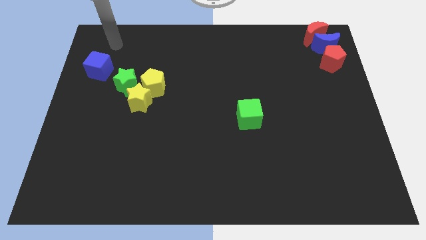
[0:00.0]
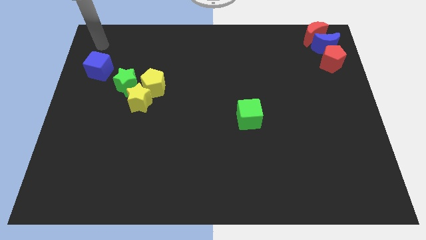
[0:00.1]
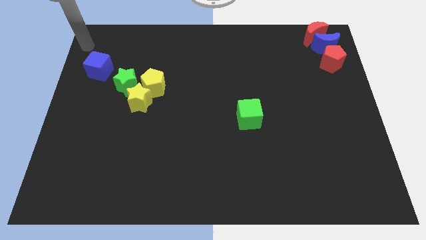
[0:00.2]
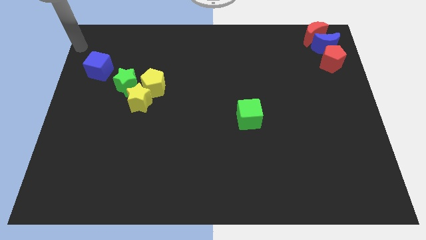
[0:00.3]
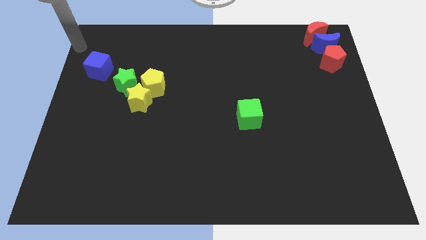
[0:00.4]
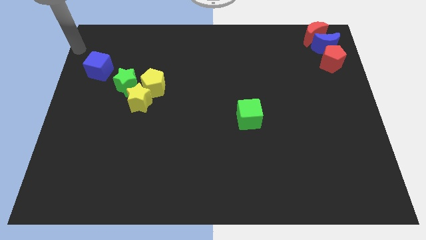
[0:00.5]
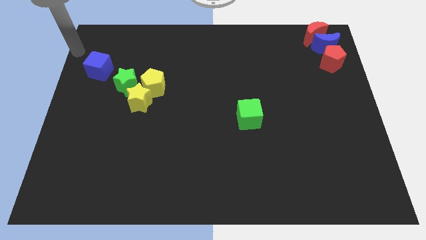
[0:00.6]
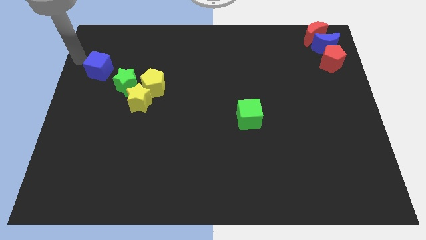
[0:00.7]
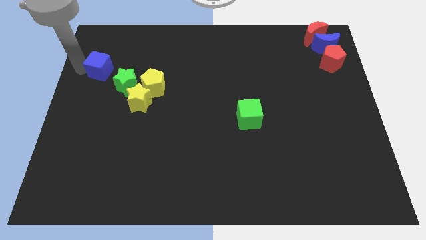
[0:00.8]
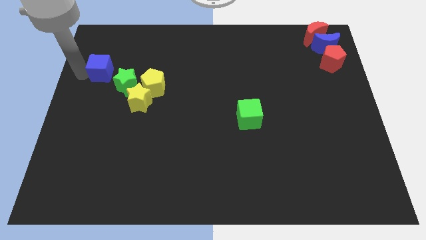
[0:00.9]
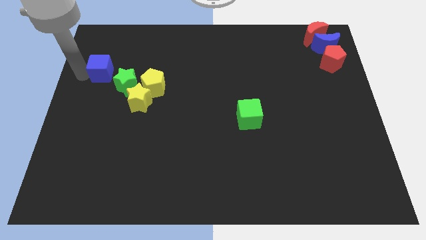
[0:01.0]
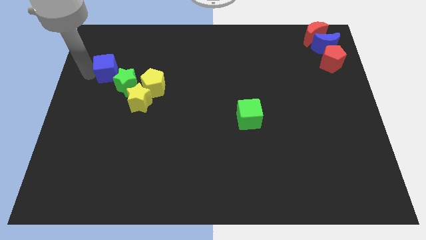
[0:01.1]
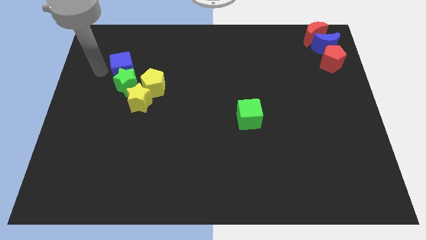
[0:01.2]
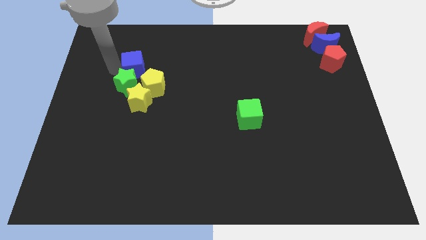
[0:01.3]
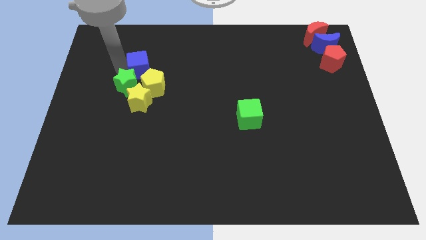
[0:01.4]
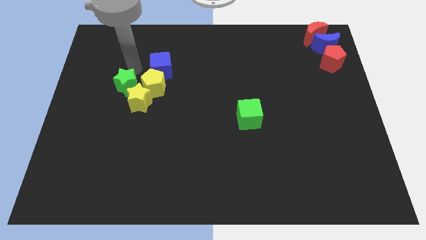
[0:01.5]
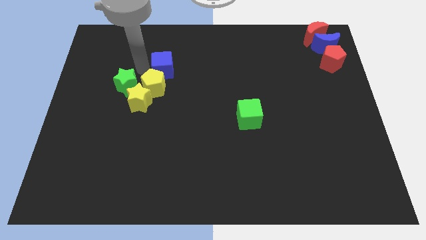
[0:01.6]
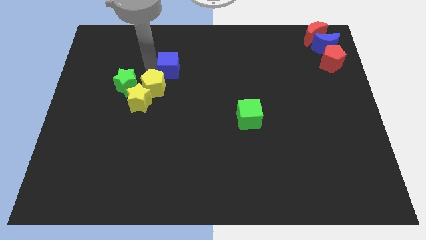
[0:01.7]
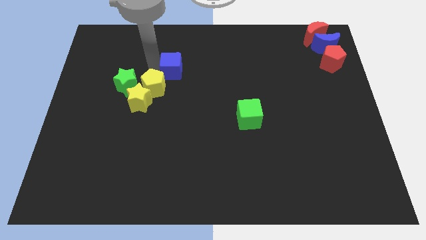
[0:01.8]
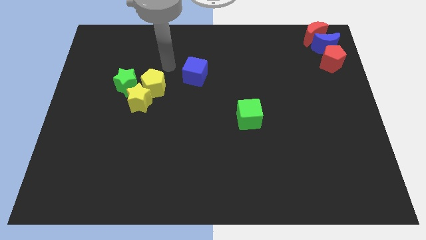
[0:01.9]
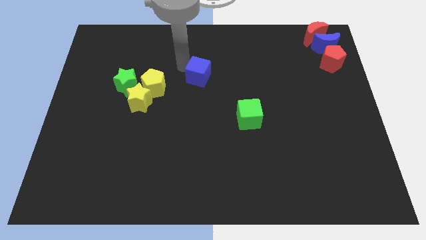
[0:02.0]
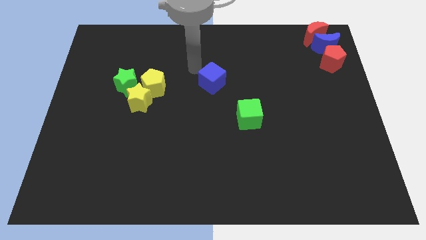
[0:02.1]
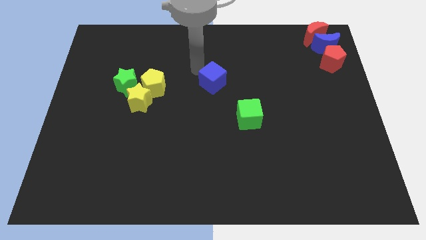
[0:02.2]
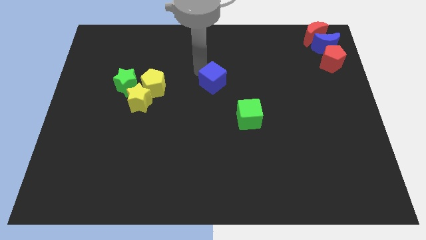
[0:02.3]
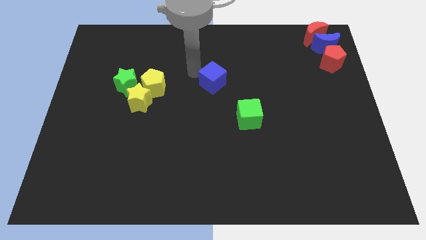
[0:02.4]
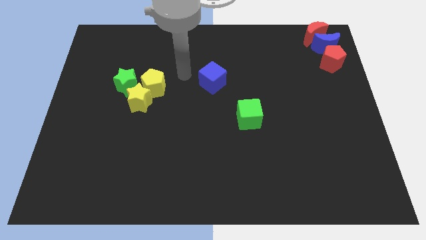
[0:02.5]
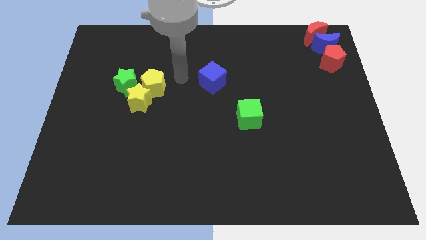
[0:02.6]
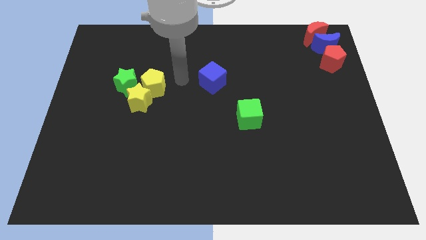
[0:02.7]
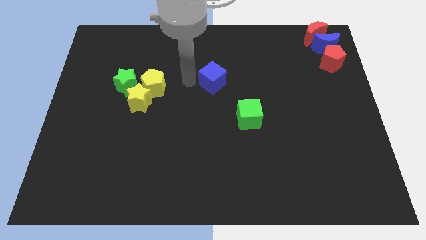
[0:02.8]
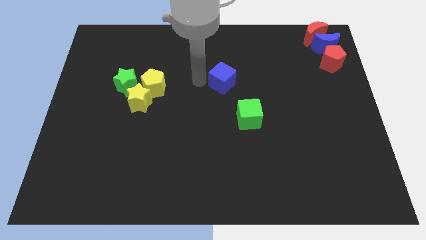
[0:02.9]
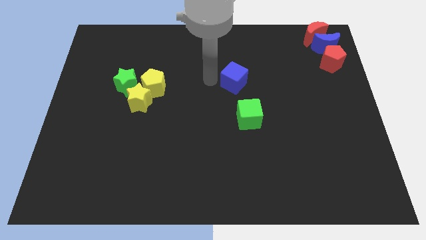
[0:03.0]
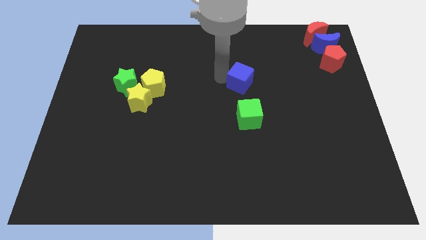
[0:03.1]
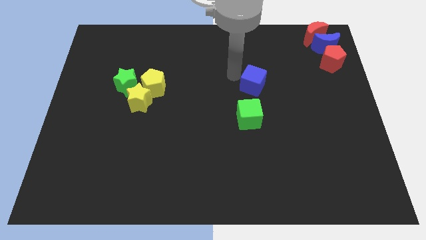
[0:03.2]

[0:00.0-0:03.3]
push the blue cube to the top side of the green cube

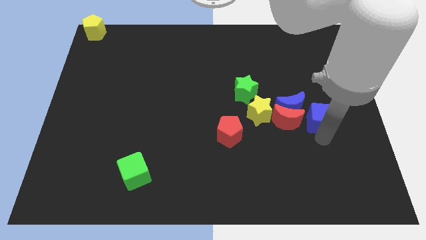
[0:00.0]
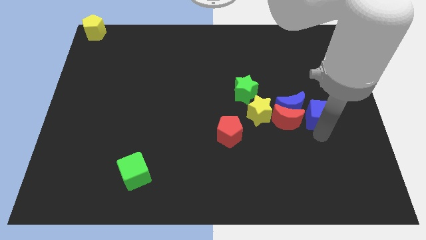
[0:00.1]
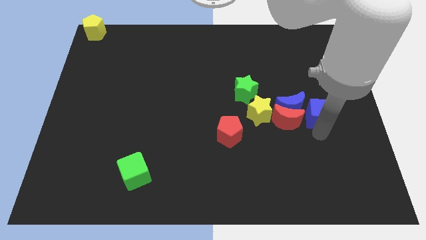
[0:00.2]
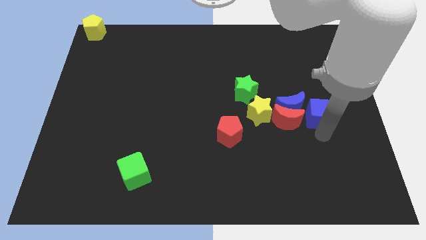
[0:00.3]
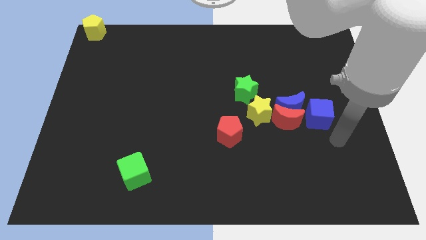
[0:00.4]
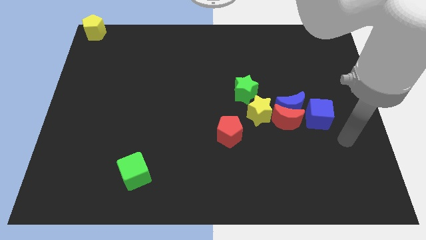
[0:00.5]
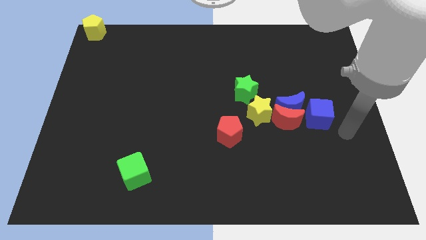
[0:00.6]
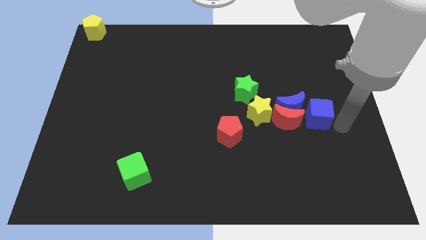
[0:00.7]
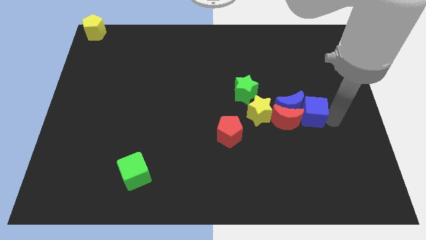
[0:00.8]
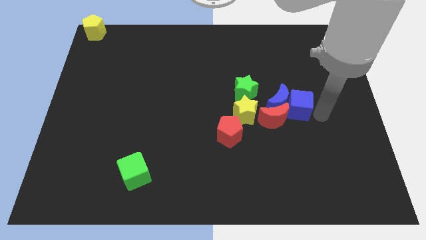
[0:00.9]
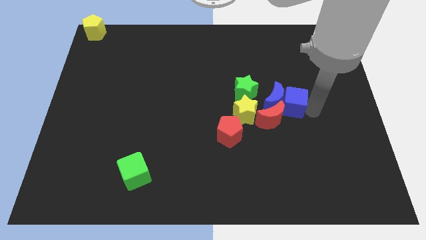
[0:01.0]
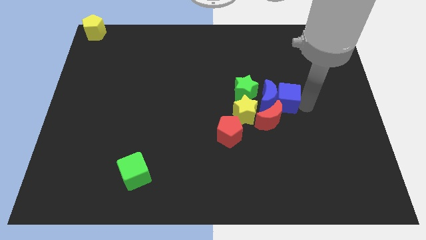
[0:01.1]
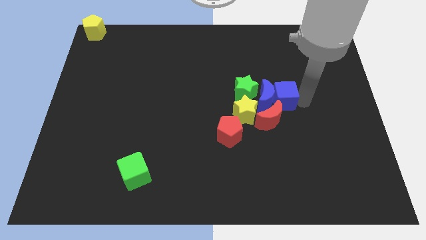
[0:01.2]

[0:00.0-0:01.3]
push the blue cube into the blue crescent

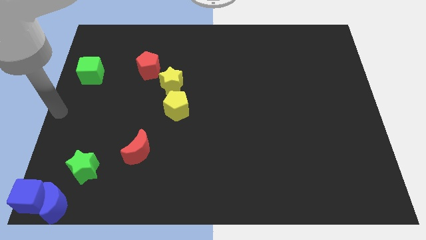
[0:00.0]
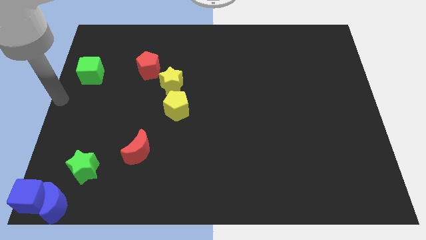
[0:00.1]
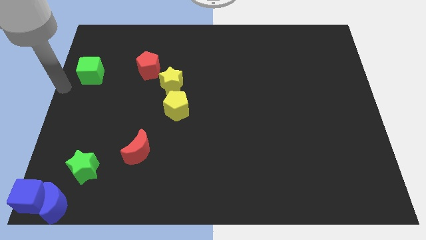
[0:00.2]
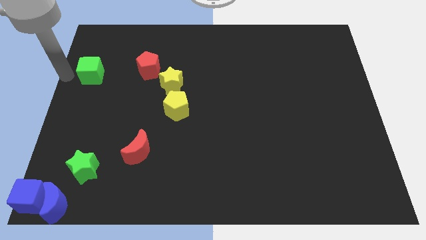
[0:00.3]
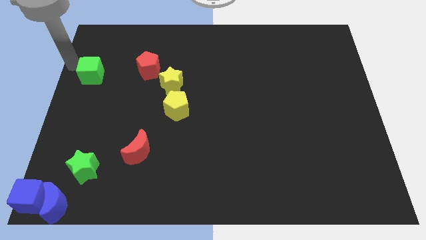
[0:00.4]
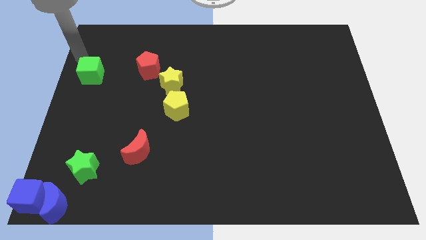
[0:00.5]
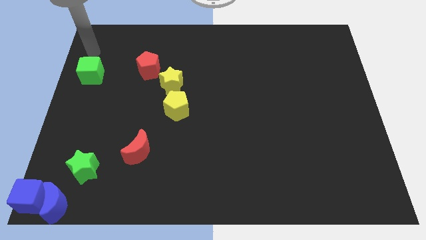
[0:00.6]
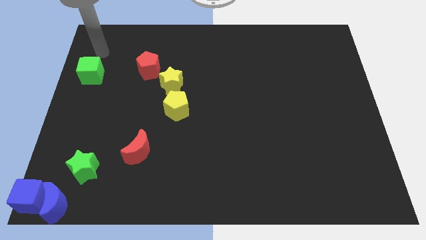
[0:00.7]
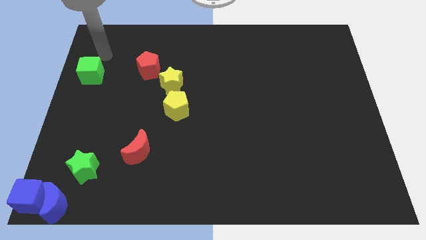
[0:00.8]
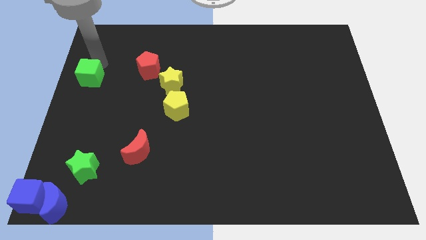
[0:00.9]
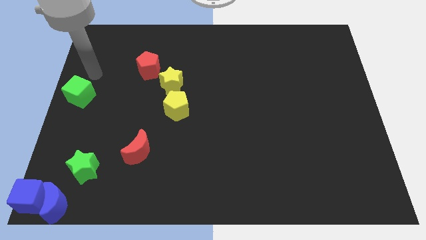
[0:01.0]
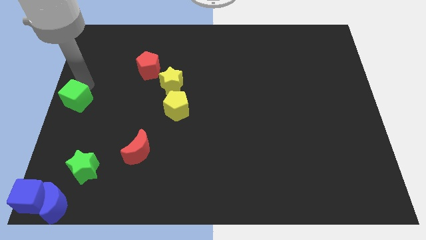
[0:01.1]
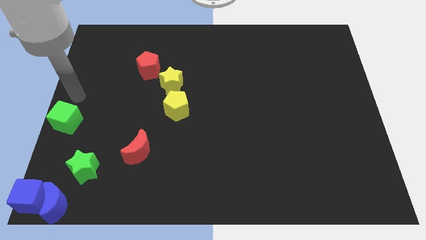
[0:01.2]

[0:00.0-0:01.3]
move the green cube to the center left of the board

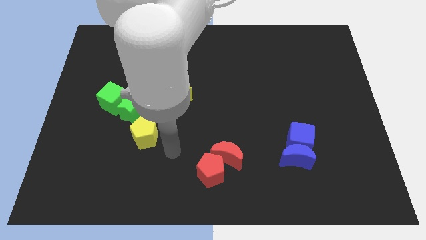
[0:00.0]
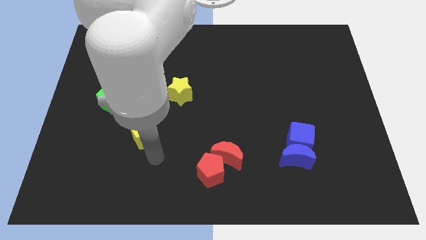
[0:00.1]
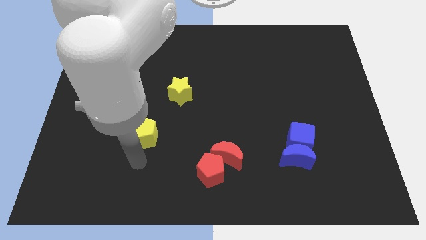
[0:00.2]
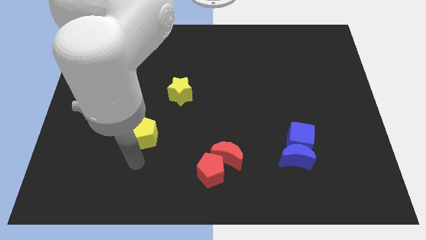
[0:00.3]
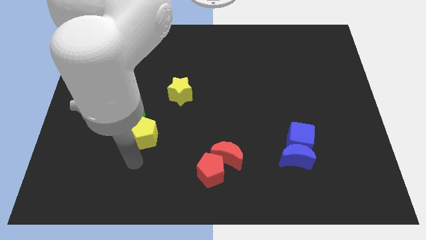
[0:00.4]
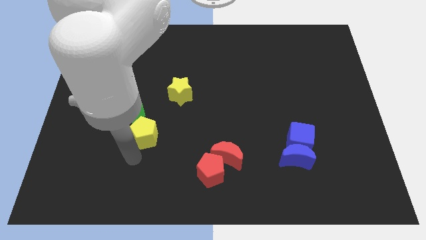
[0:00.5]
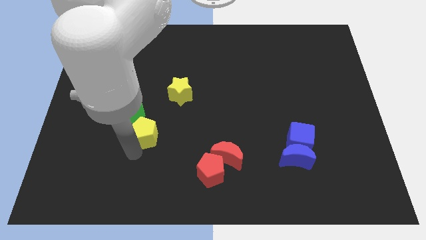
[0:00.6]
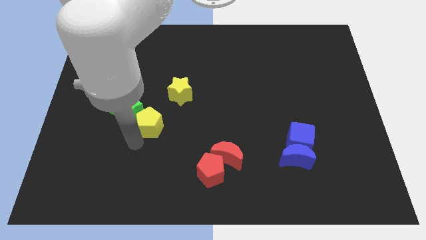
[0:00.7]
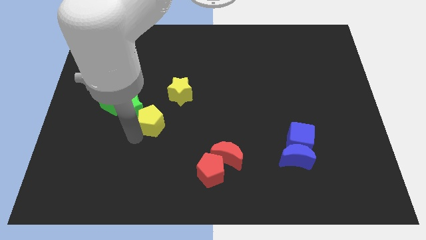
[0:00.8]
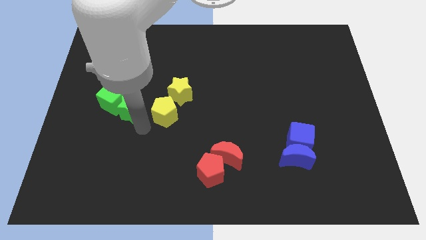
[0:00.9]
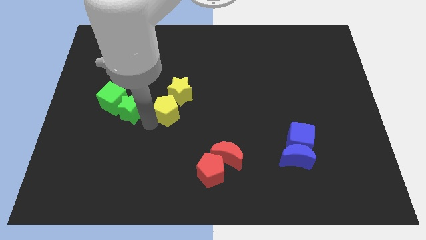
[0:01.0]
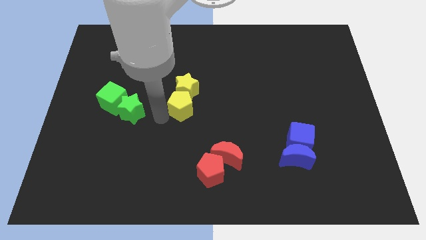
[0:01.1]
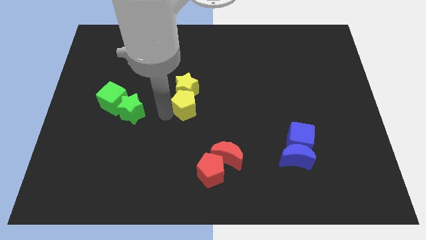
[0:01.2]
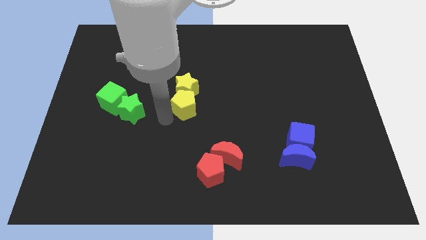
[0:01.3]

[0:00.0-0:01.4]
push yellow pentagon into yellow star

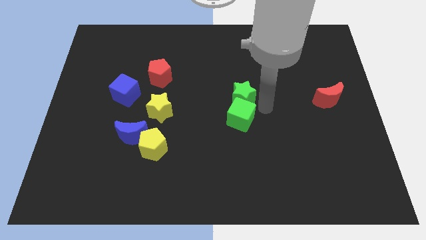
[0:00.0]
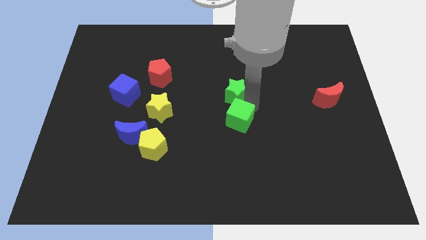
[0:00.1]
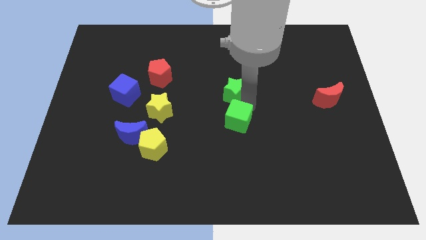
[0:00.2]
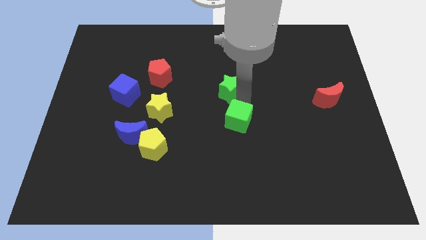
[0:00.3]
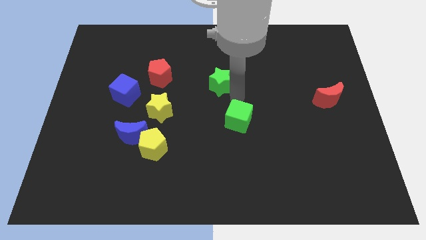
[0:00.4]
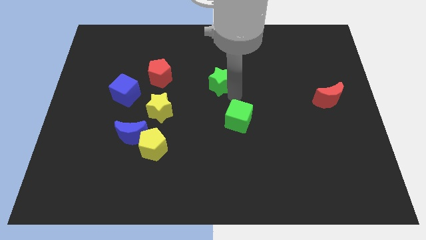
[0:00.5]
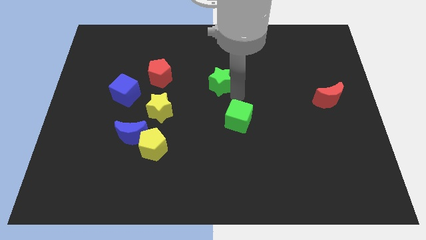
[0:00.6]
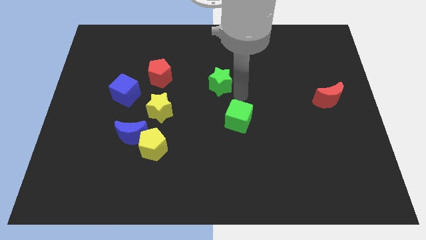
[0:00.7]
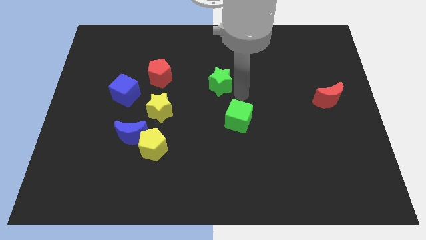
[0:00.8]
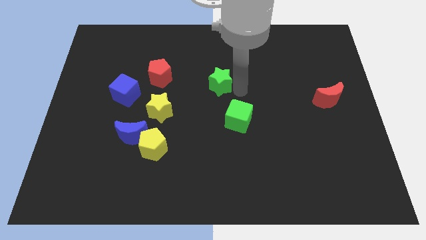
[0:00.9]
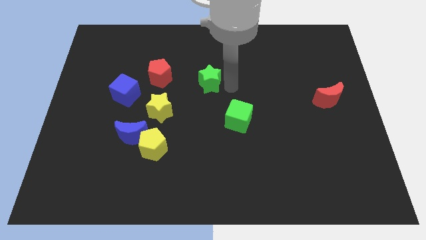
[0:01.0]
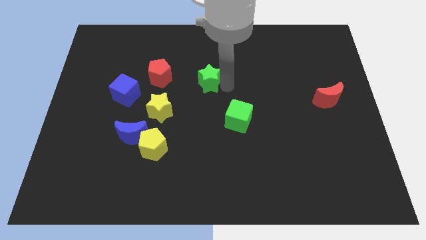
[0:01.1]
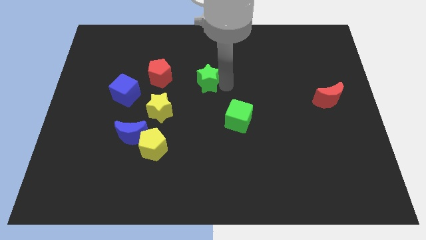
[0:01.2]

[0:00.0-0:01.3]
separate the green blocks towards center

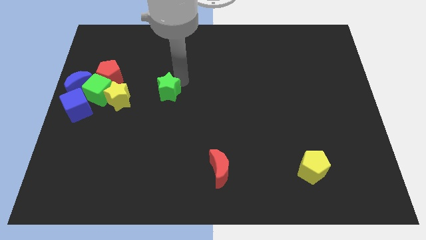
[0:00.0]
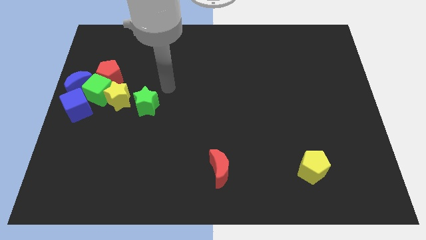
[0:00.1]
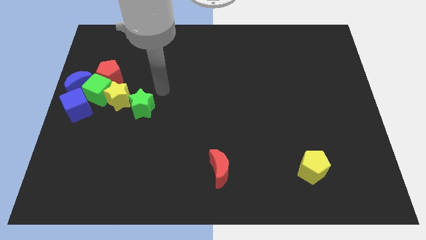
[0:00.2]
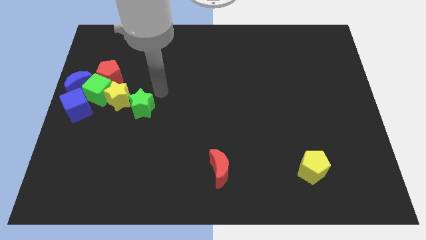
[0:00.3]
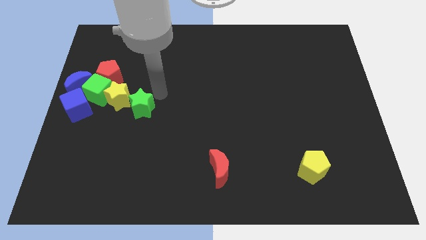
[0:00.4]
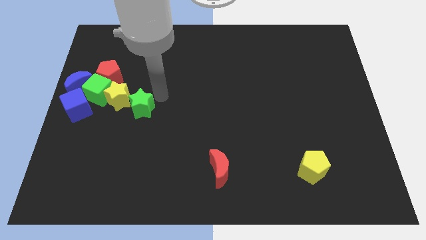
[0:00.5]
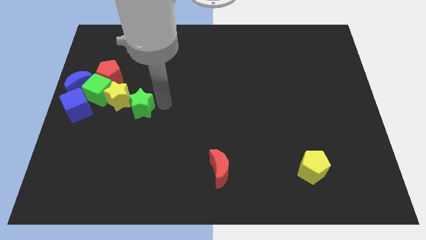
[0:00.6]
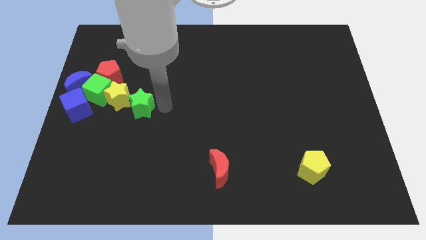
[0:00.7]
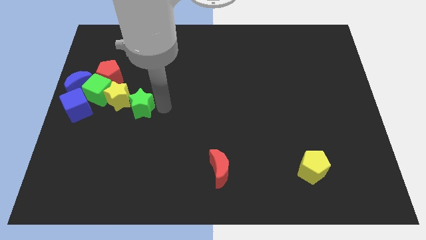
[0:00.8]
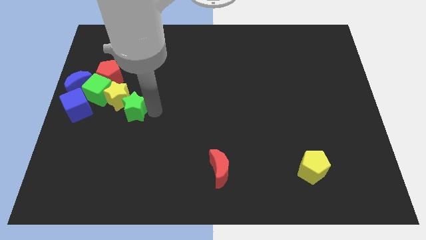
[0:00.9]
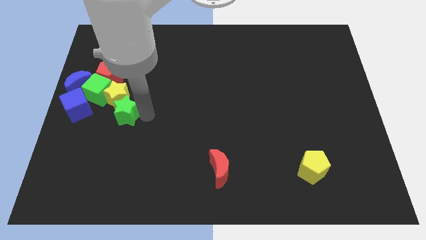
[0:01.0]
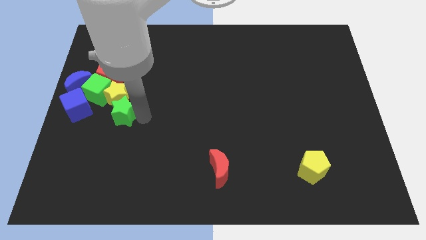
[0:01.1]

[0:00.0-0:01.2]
move green star below yellow star
